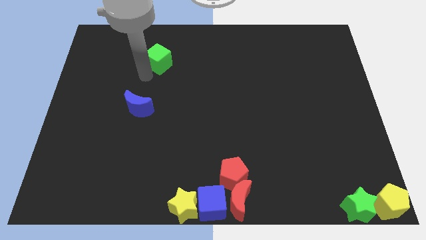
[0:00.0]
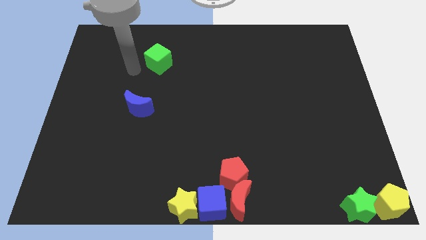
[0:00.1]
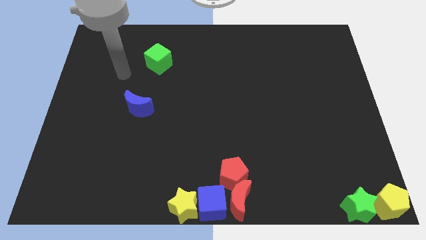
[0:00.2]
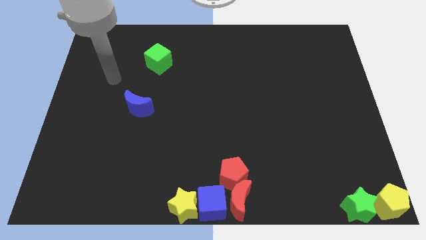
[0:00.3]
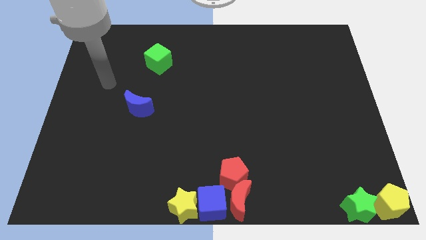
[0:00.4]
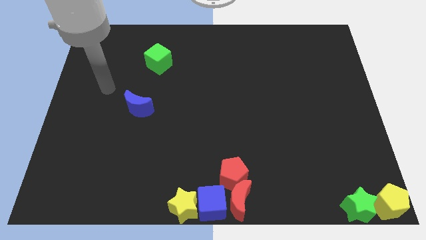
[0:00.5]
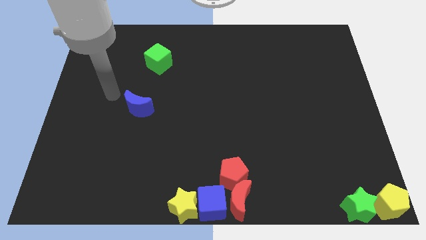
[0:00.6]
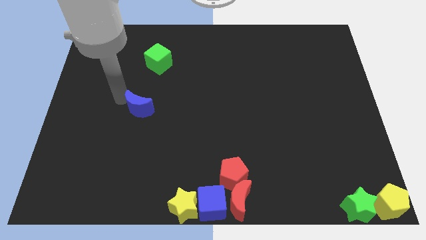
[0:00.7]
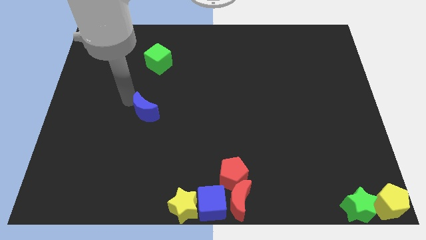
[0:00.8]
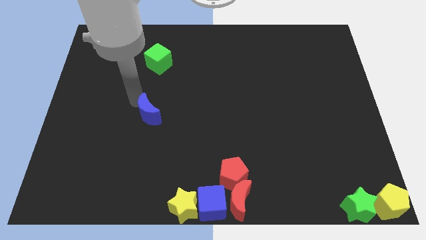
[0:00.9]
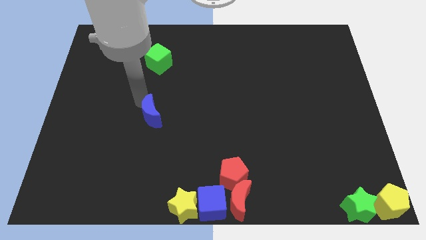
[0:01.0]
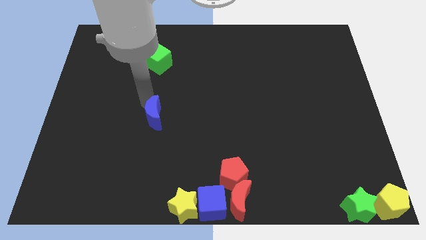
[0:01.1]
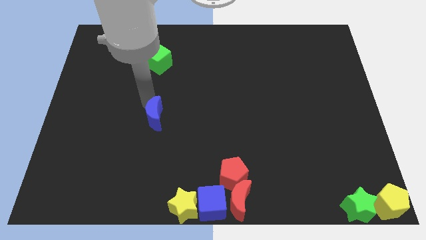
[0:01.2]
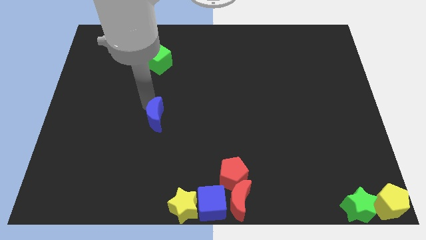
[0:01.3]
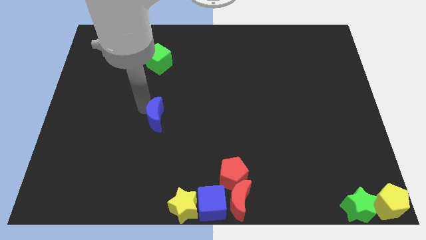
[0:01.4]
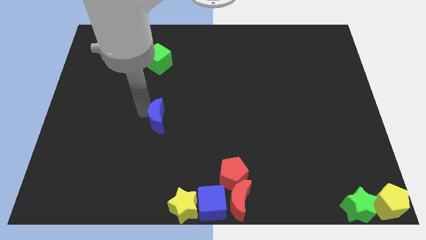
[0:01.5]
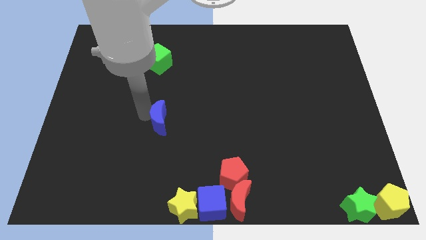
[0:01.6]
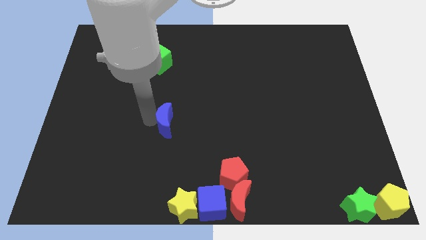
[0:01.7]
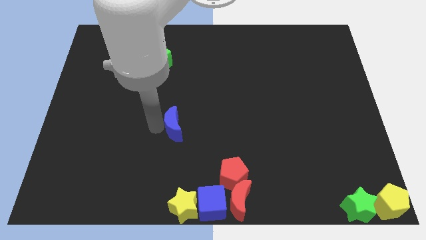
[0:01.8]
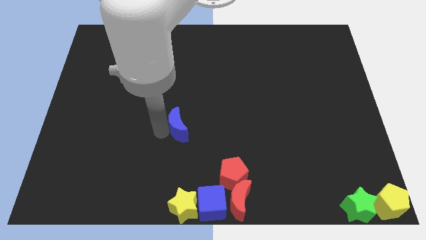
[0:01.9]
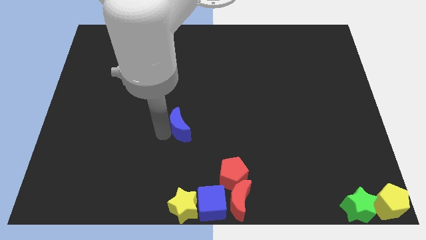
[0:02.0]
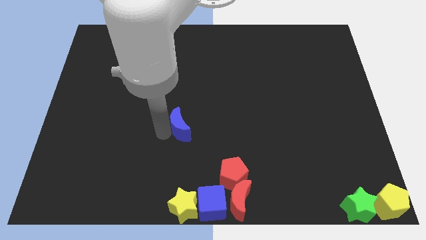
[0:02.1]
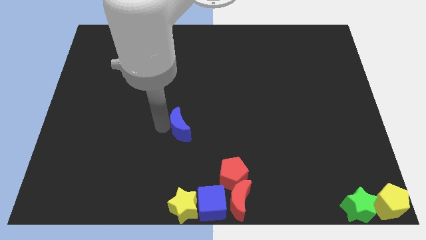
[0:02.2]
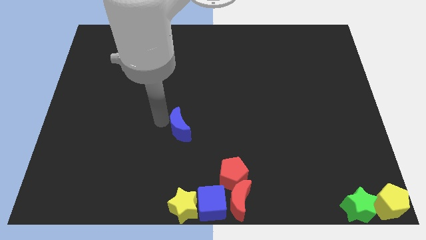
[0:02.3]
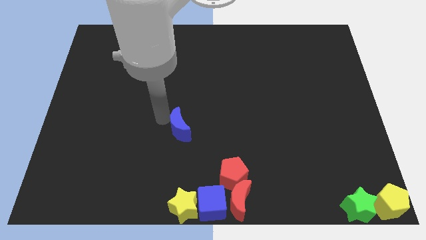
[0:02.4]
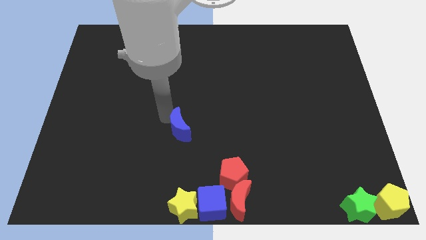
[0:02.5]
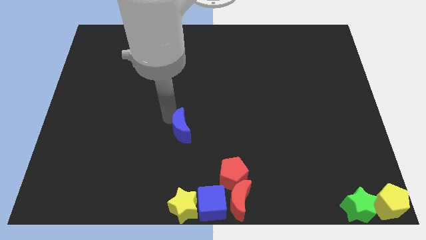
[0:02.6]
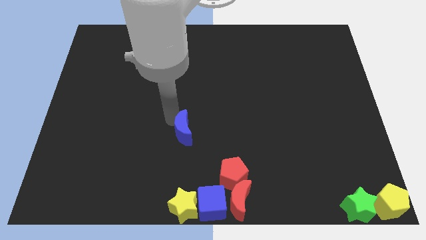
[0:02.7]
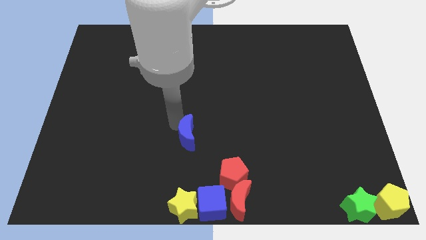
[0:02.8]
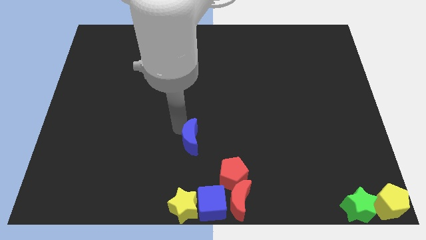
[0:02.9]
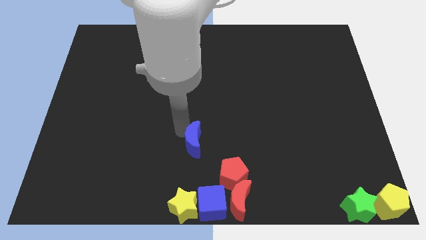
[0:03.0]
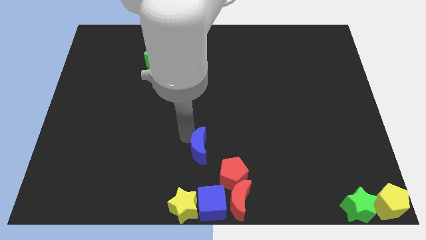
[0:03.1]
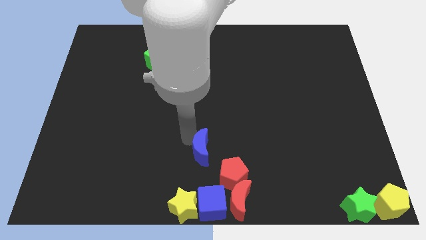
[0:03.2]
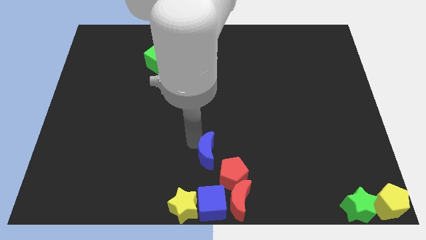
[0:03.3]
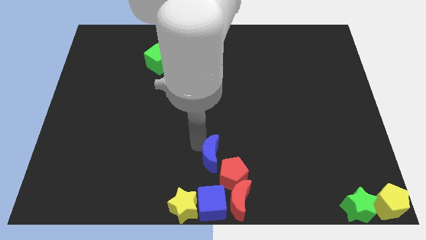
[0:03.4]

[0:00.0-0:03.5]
move the blue crescent to the top of the blue cube

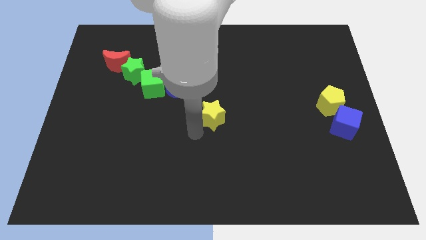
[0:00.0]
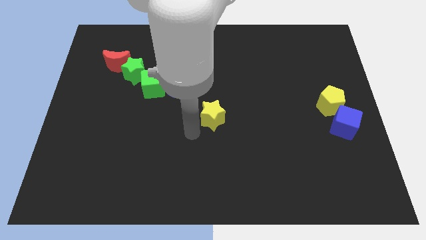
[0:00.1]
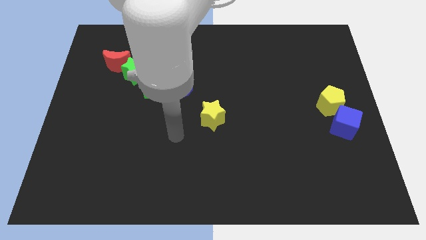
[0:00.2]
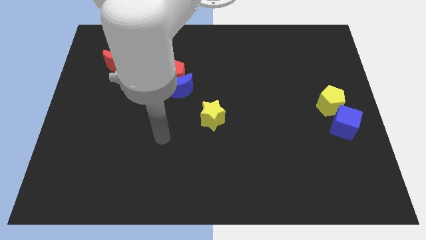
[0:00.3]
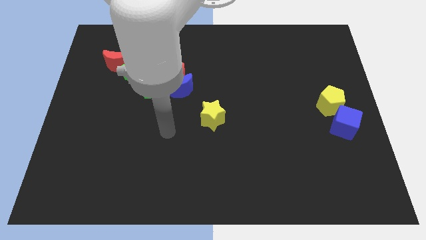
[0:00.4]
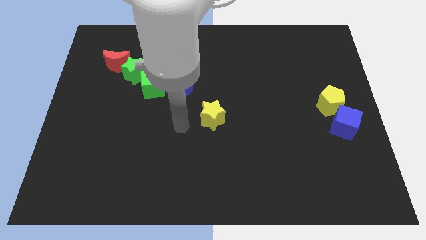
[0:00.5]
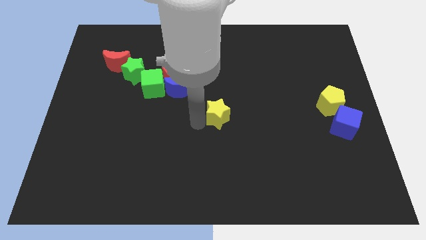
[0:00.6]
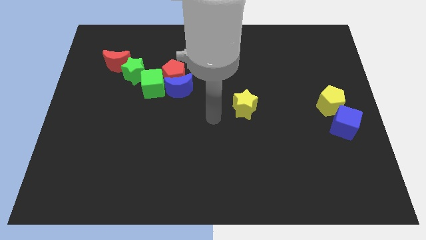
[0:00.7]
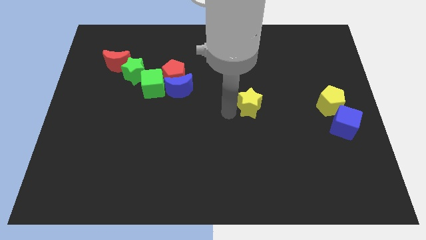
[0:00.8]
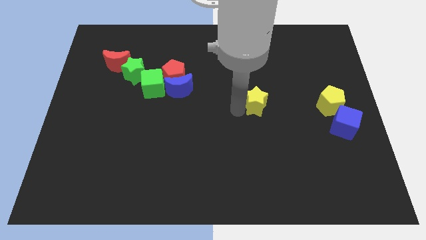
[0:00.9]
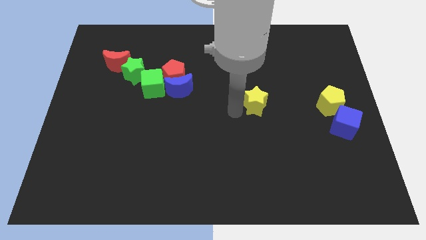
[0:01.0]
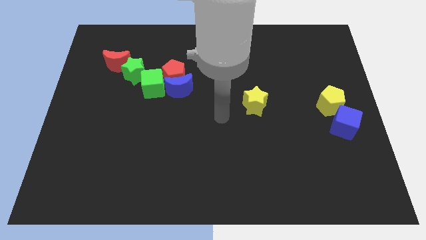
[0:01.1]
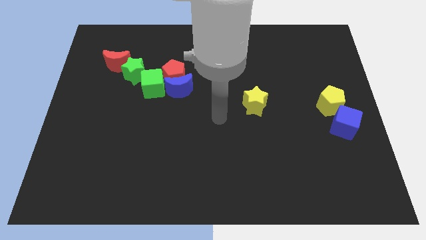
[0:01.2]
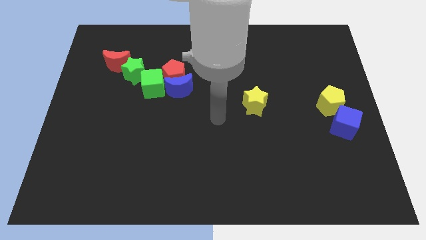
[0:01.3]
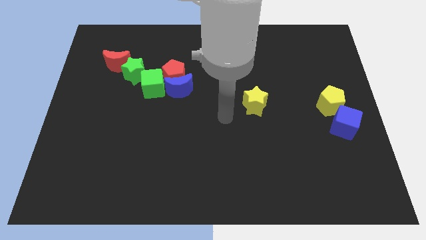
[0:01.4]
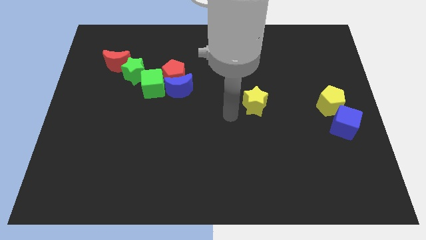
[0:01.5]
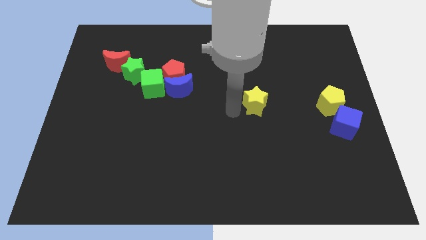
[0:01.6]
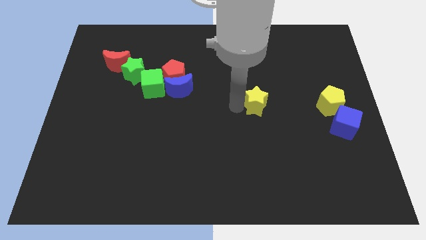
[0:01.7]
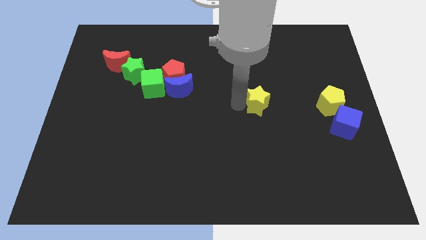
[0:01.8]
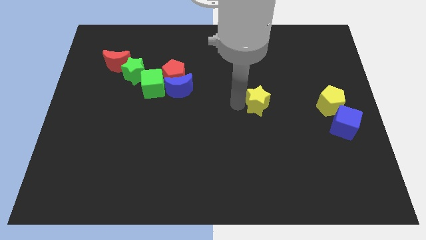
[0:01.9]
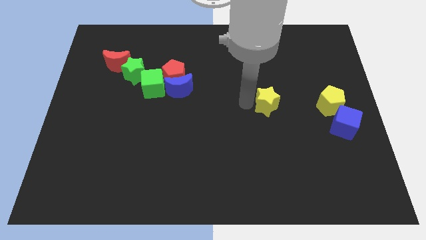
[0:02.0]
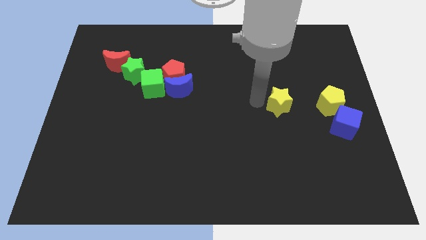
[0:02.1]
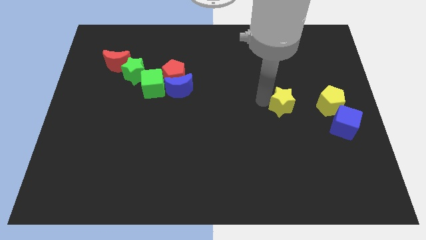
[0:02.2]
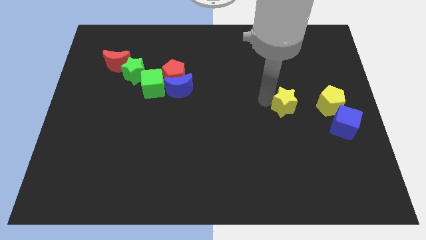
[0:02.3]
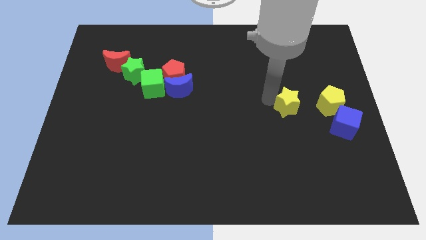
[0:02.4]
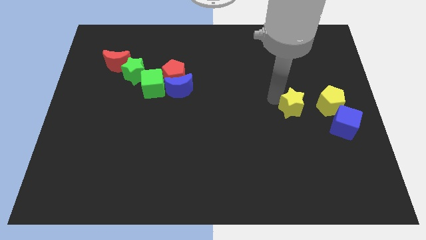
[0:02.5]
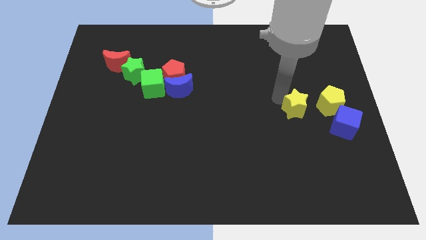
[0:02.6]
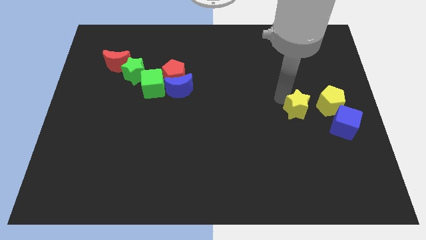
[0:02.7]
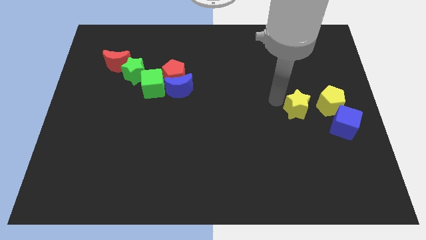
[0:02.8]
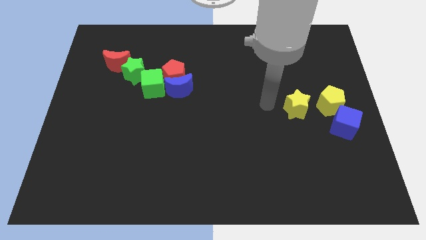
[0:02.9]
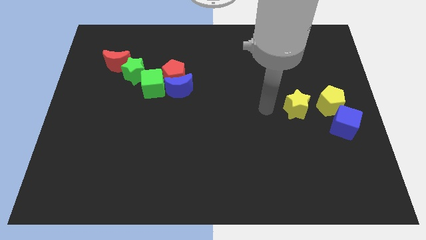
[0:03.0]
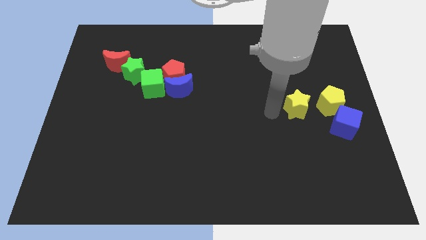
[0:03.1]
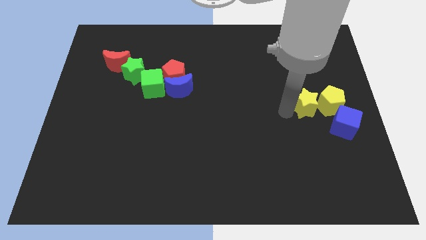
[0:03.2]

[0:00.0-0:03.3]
move the yellow star to the left of the yellow pentagon

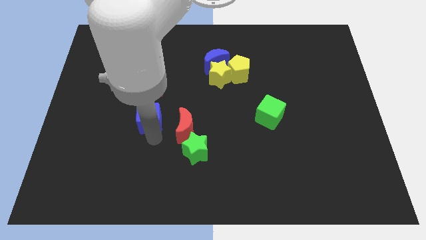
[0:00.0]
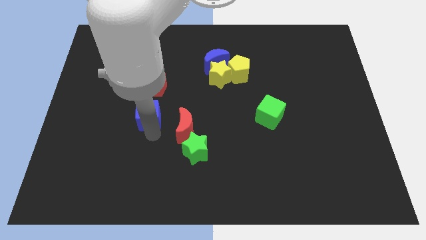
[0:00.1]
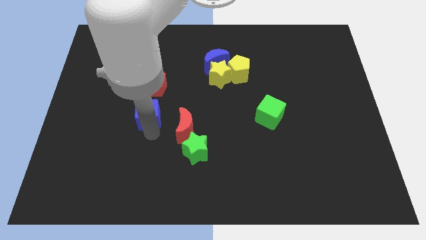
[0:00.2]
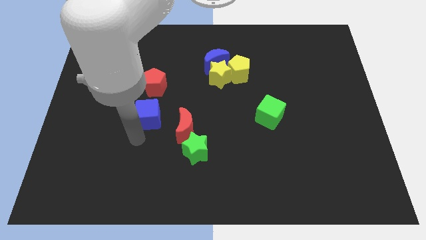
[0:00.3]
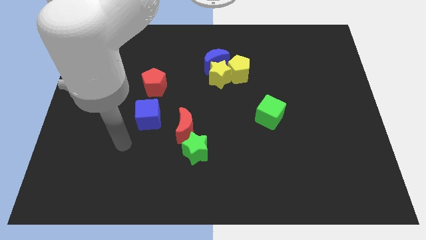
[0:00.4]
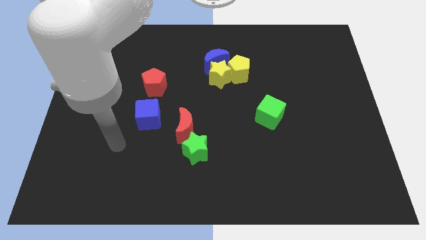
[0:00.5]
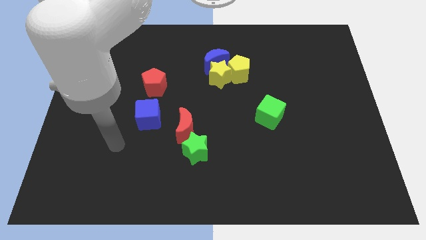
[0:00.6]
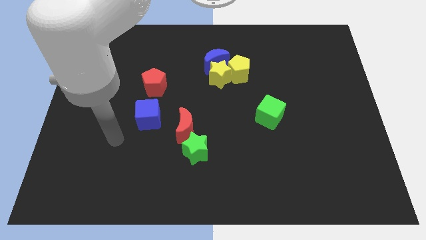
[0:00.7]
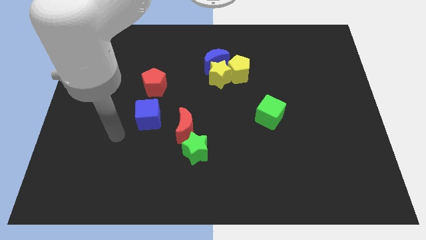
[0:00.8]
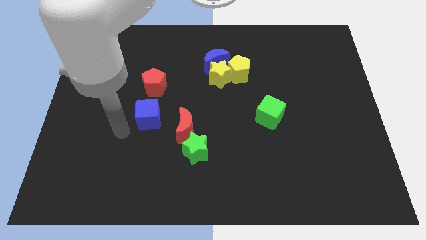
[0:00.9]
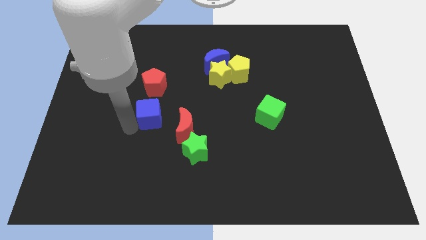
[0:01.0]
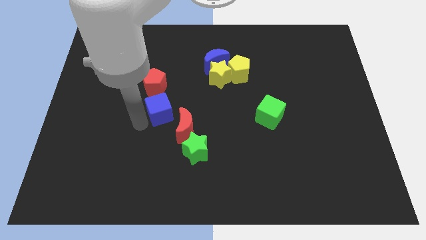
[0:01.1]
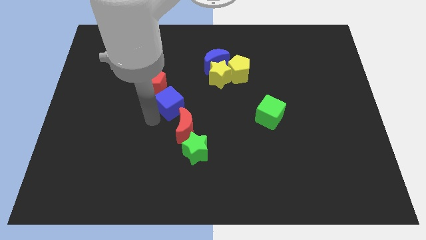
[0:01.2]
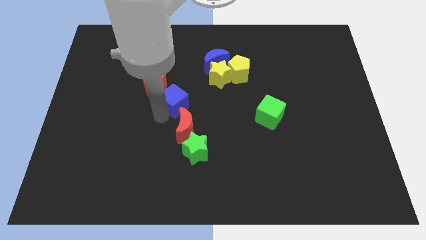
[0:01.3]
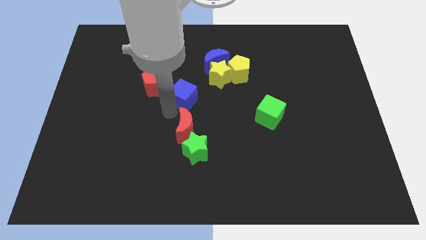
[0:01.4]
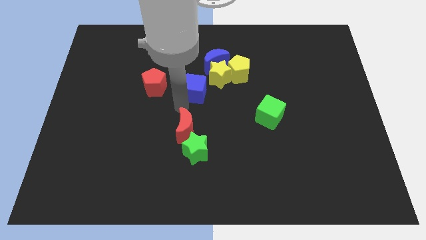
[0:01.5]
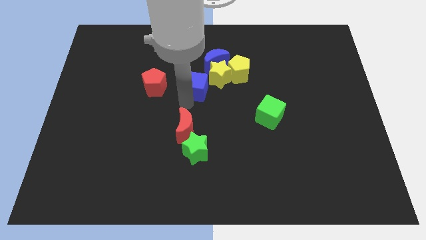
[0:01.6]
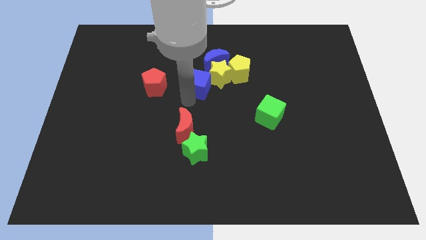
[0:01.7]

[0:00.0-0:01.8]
push the blue square into yellow star

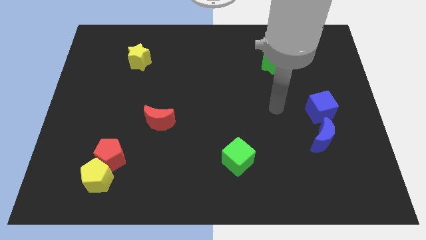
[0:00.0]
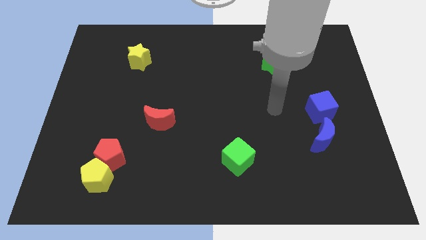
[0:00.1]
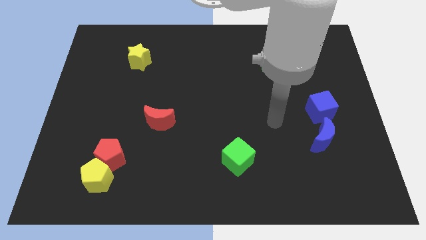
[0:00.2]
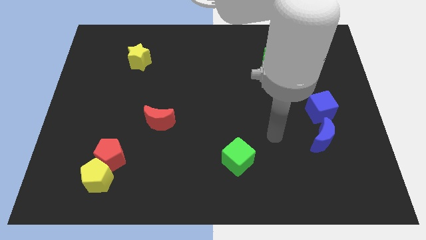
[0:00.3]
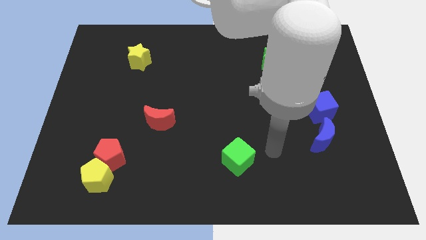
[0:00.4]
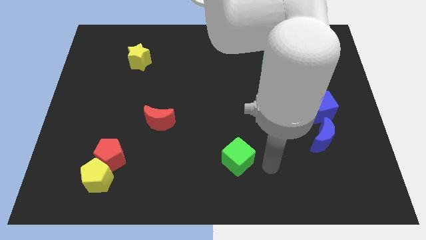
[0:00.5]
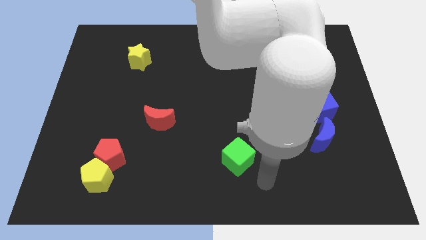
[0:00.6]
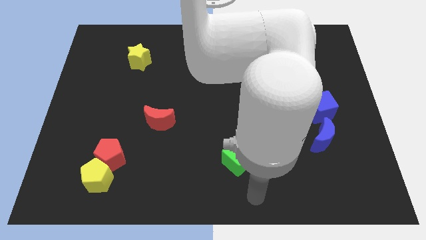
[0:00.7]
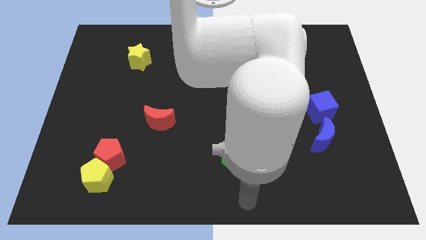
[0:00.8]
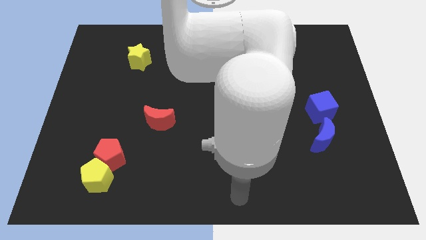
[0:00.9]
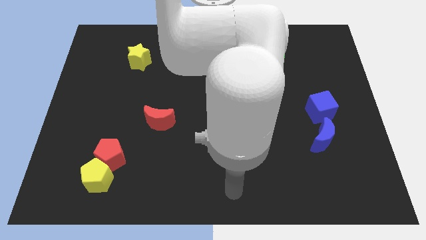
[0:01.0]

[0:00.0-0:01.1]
move your arm to the bottom side of the green cube
